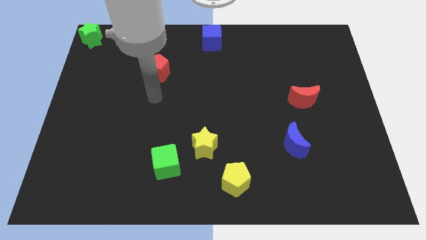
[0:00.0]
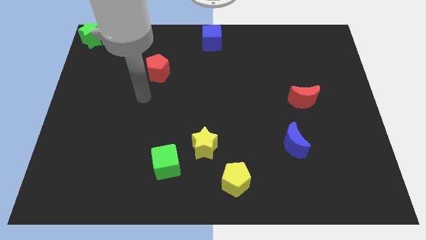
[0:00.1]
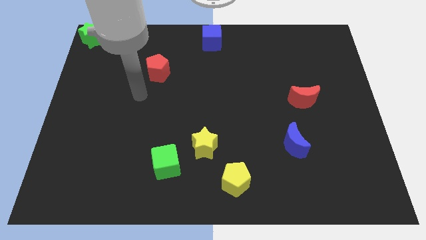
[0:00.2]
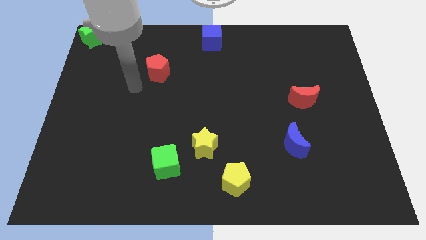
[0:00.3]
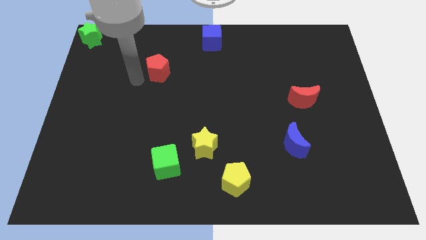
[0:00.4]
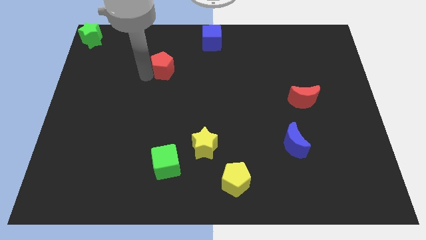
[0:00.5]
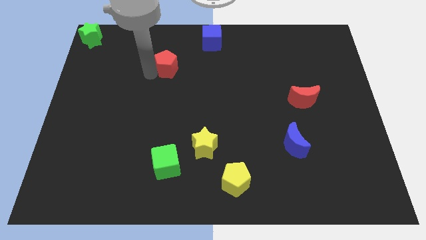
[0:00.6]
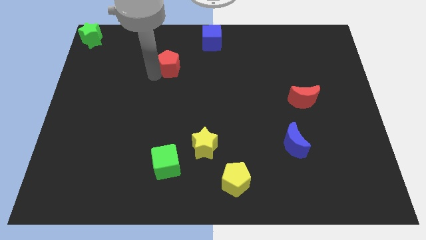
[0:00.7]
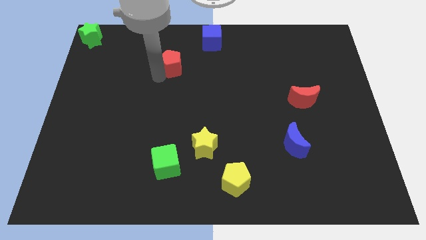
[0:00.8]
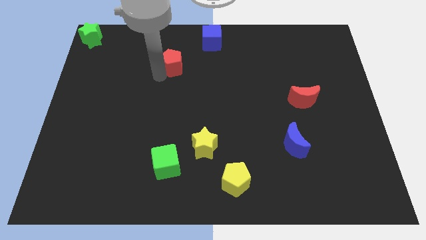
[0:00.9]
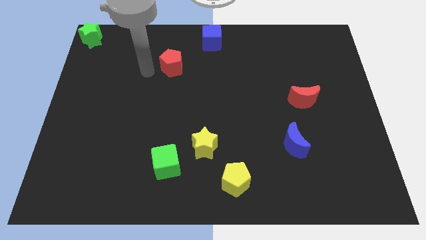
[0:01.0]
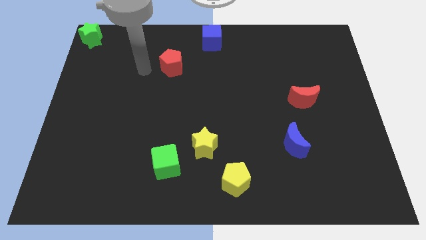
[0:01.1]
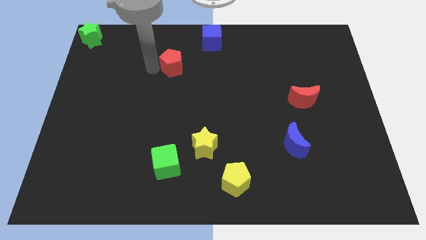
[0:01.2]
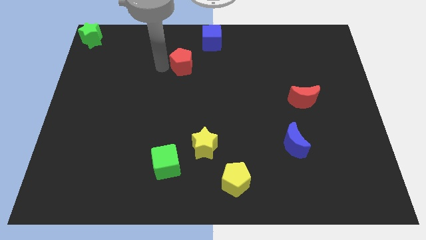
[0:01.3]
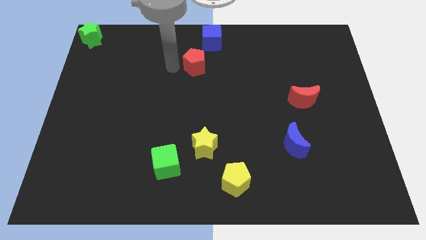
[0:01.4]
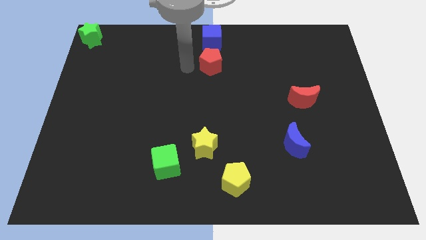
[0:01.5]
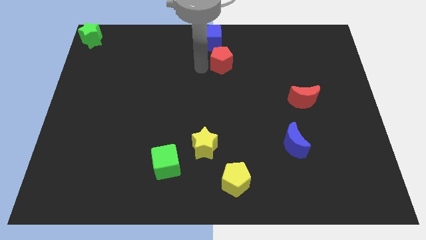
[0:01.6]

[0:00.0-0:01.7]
move the red pentagon towards the blue cube

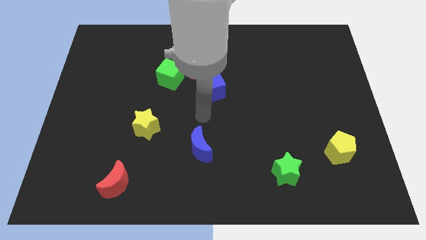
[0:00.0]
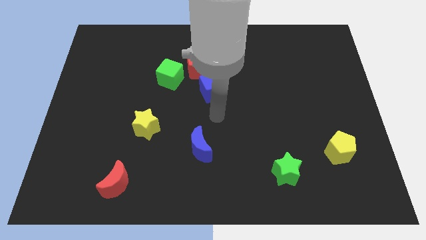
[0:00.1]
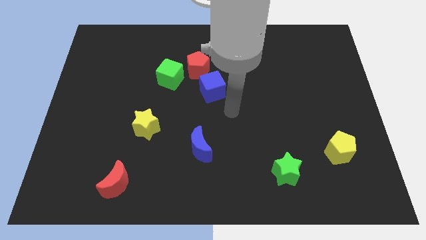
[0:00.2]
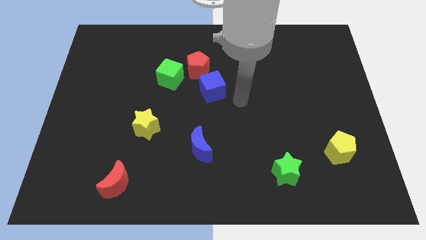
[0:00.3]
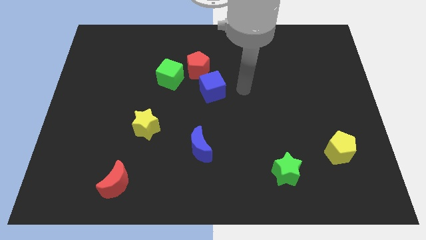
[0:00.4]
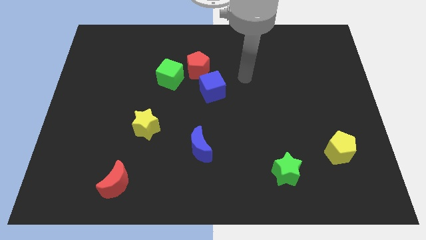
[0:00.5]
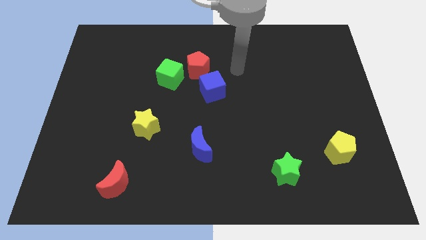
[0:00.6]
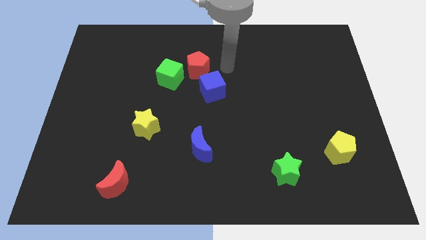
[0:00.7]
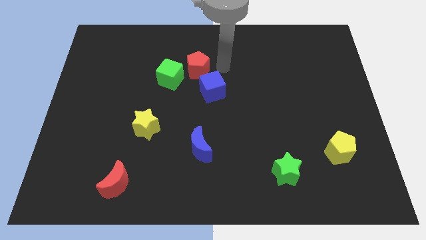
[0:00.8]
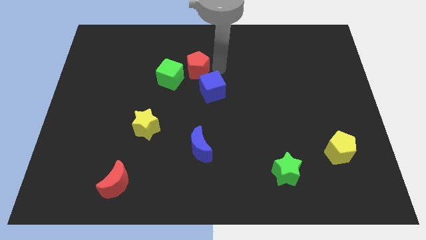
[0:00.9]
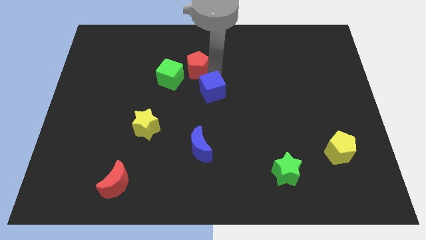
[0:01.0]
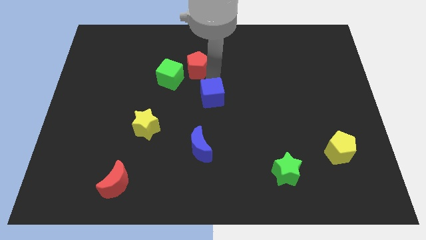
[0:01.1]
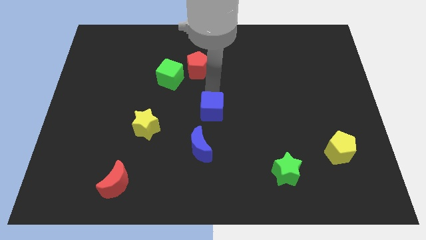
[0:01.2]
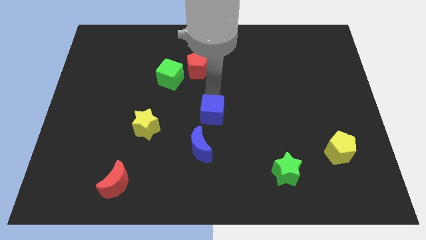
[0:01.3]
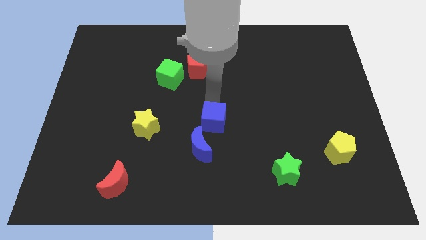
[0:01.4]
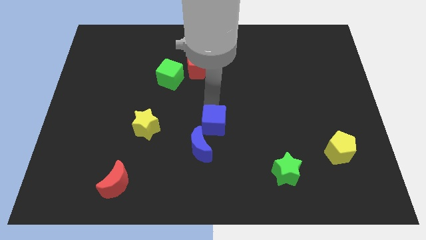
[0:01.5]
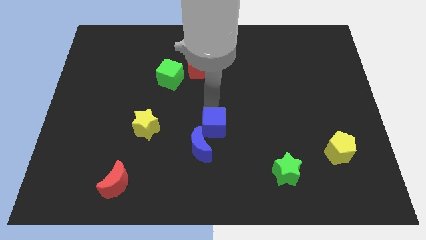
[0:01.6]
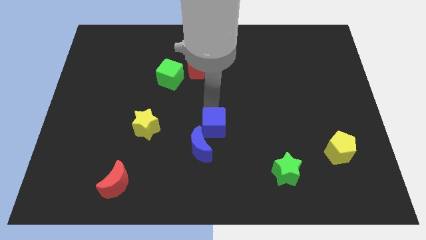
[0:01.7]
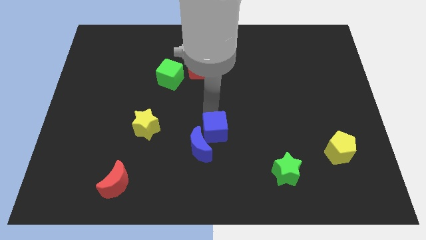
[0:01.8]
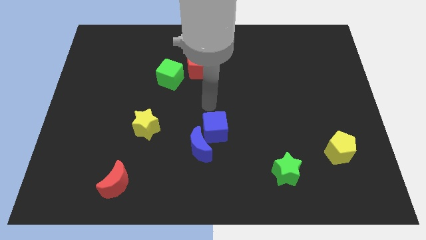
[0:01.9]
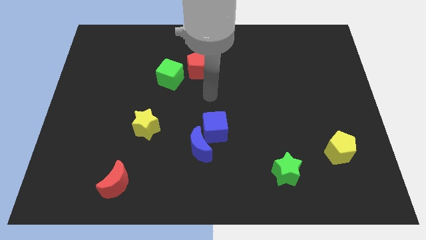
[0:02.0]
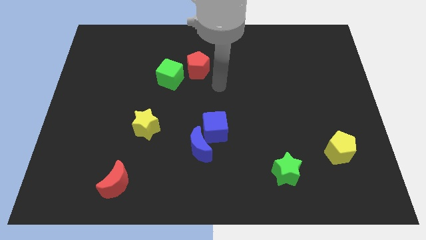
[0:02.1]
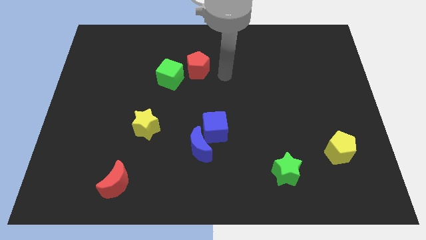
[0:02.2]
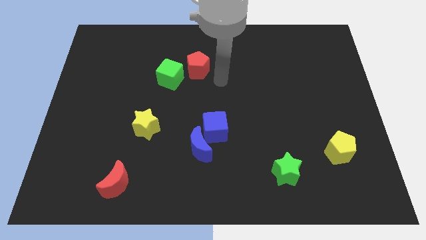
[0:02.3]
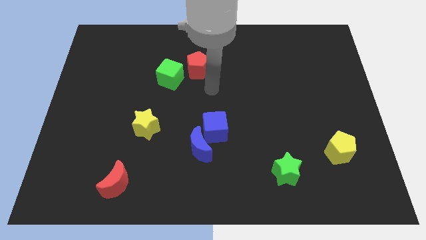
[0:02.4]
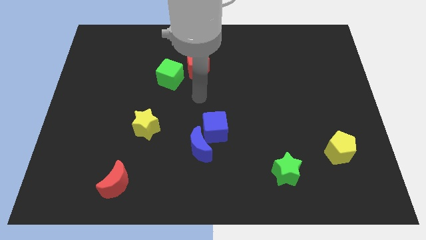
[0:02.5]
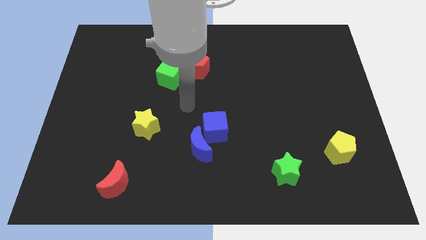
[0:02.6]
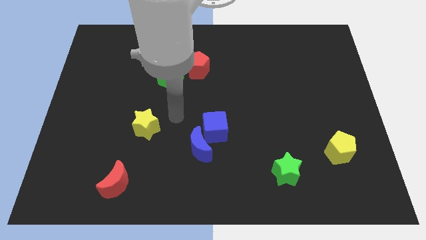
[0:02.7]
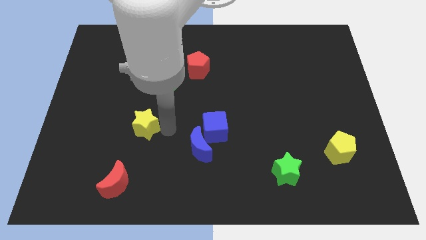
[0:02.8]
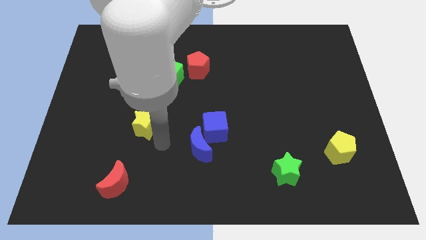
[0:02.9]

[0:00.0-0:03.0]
move the blue cube to the top right side of the blue moon

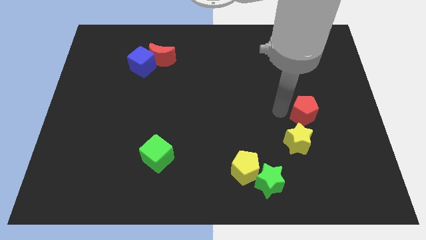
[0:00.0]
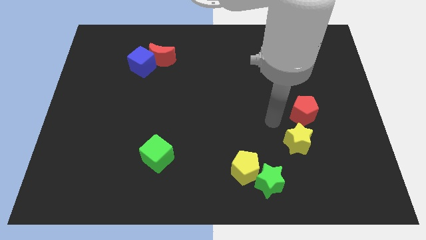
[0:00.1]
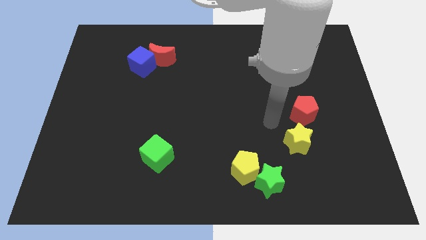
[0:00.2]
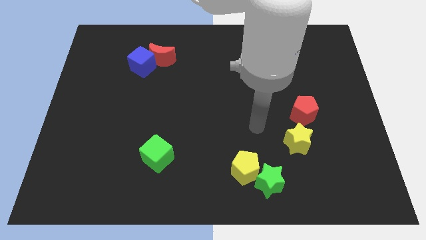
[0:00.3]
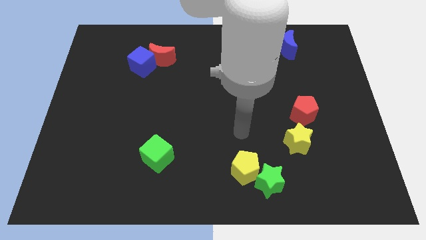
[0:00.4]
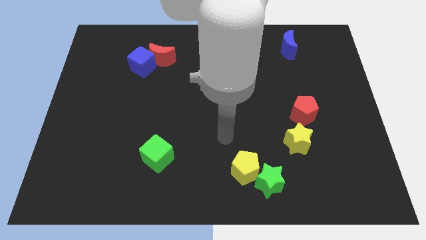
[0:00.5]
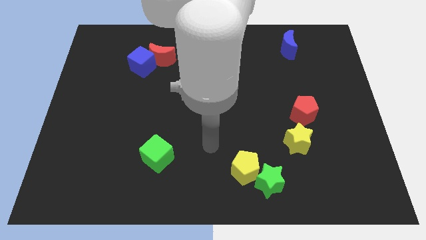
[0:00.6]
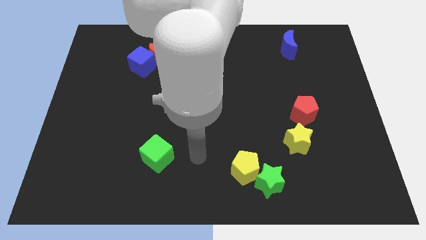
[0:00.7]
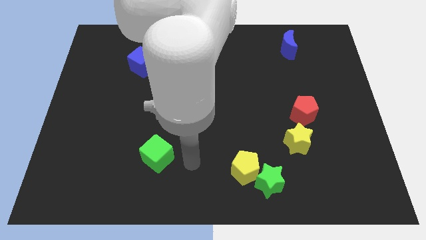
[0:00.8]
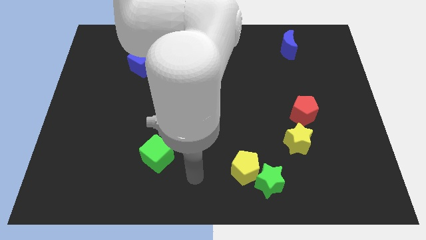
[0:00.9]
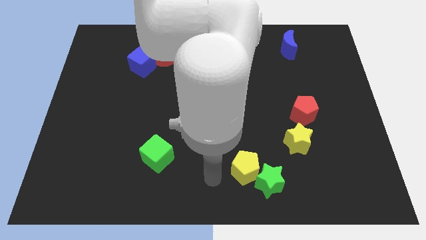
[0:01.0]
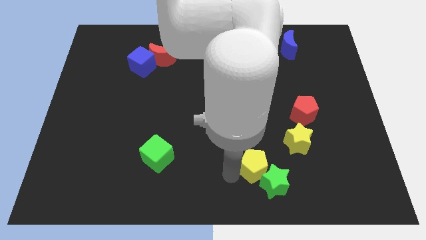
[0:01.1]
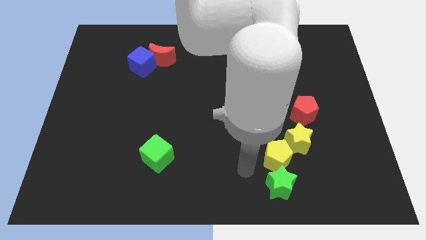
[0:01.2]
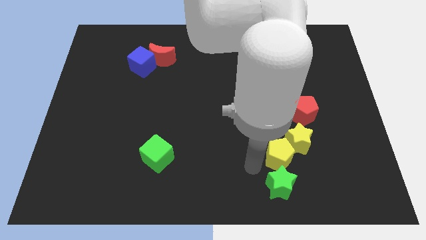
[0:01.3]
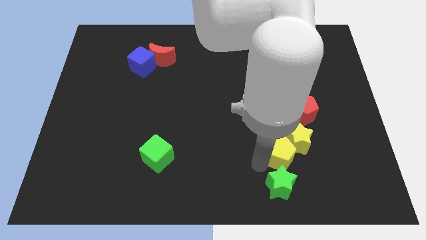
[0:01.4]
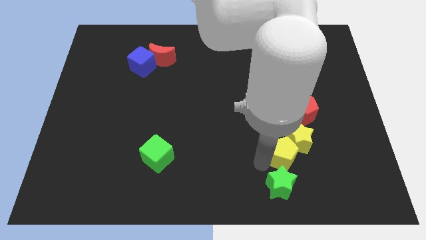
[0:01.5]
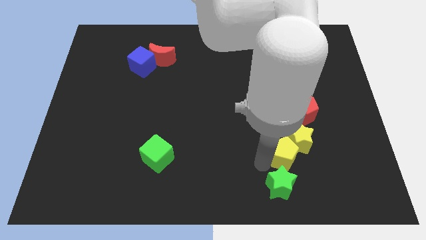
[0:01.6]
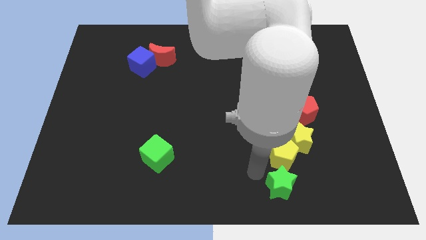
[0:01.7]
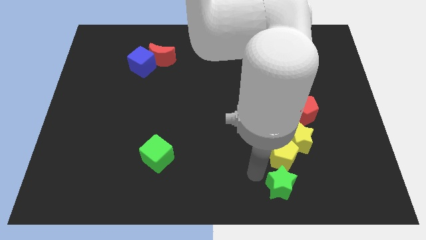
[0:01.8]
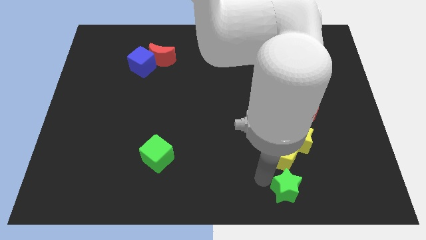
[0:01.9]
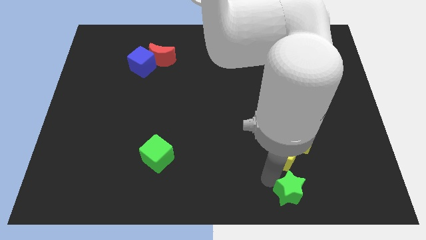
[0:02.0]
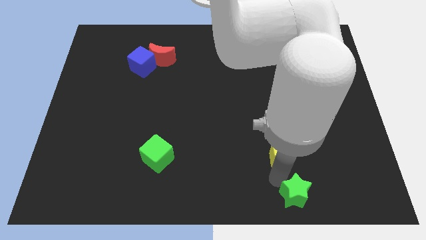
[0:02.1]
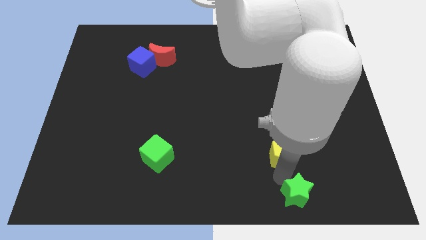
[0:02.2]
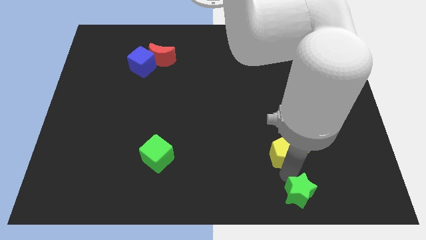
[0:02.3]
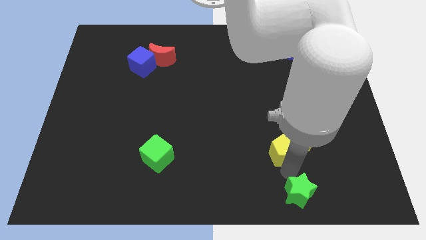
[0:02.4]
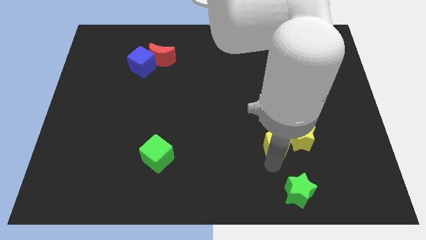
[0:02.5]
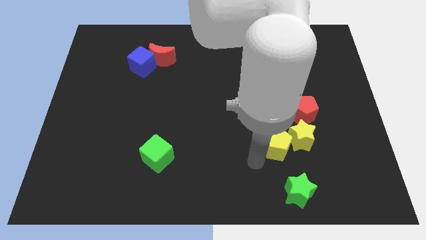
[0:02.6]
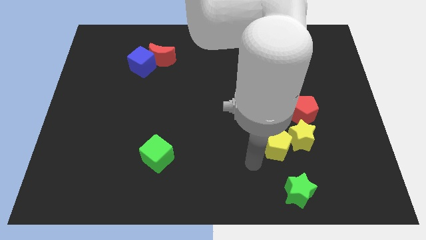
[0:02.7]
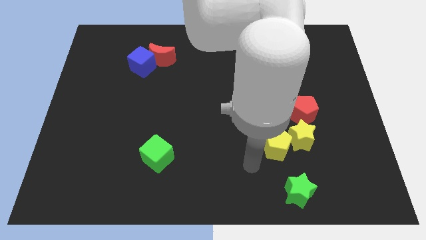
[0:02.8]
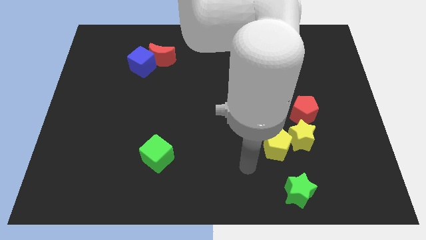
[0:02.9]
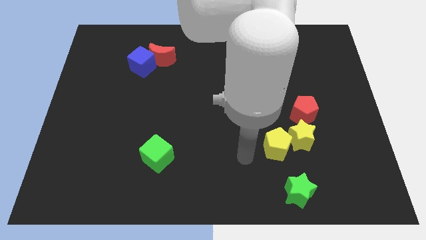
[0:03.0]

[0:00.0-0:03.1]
move the green star and the yellow pentagon away from each other

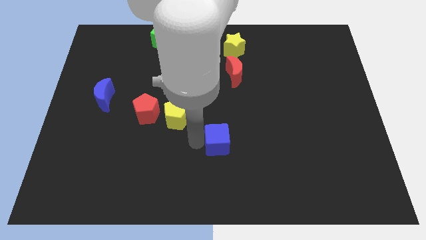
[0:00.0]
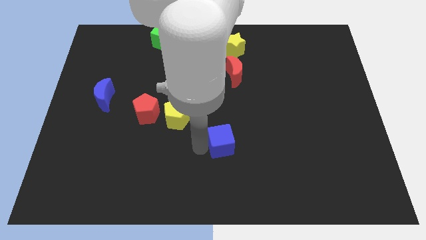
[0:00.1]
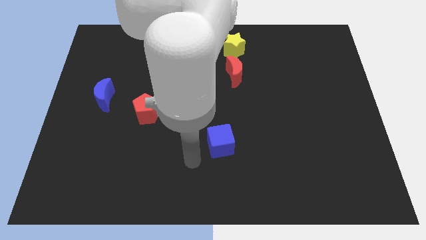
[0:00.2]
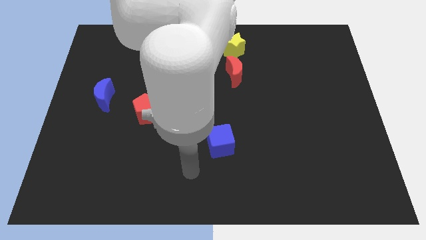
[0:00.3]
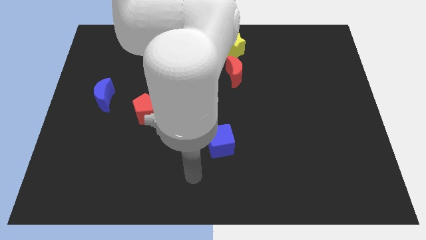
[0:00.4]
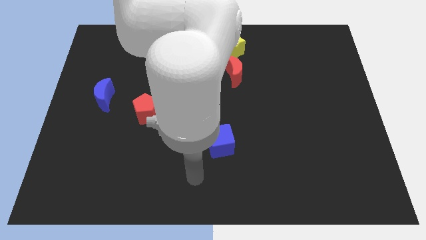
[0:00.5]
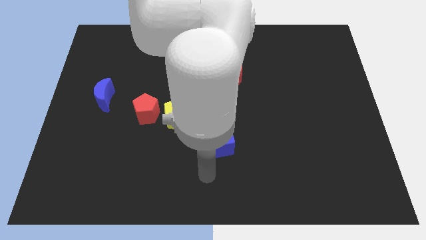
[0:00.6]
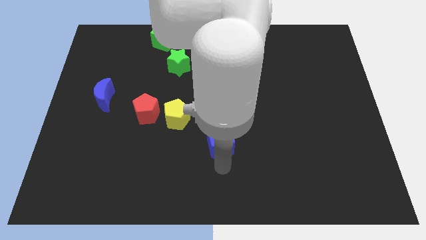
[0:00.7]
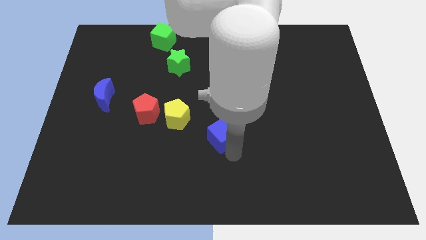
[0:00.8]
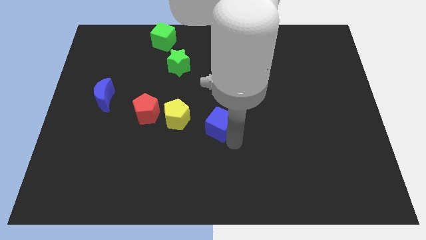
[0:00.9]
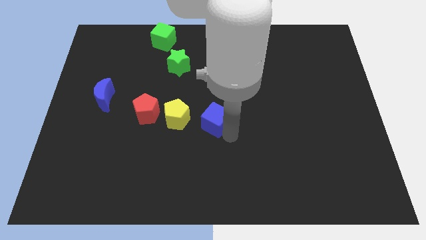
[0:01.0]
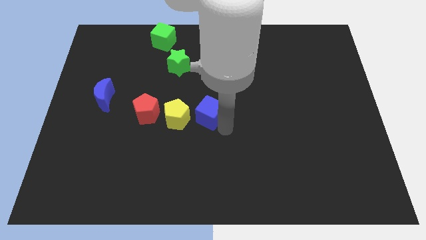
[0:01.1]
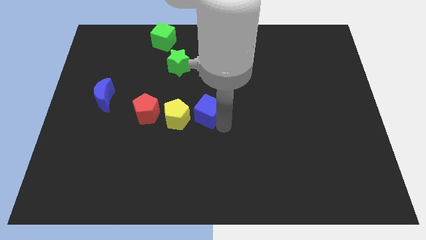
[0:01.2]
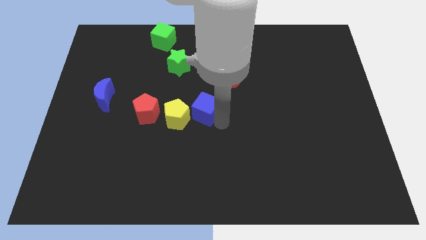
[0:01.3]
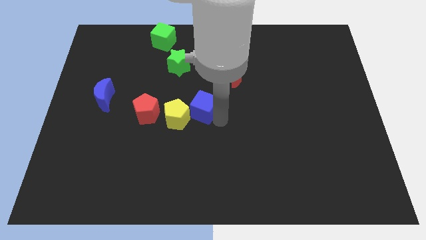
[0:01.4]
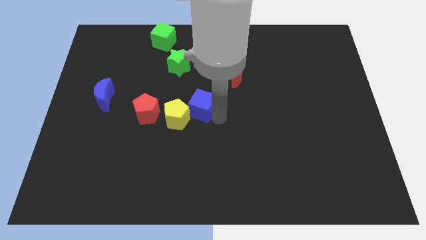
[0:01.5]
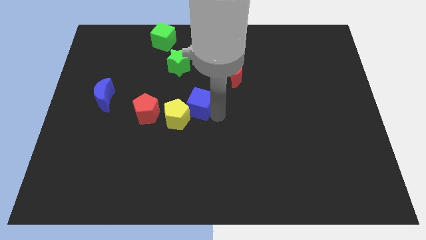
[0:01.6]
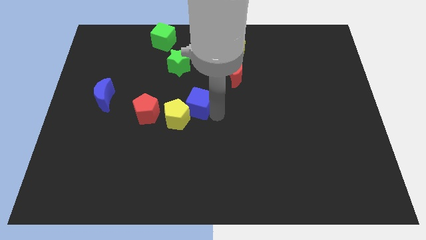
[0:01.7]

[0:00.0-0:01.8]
move the blue cube in between the yellow pentagon and red moon
